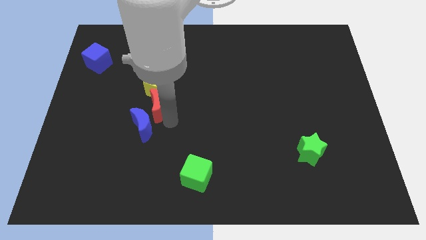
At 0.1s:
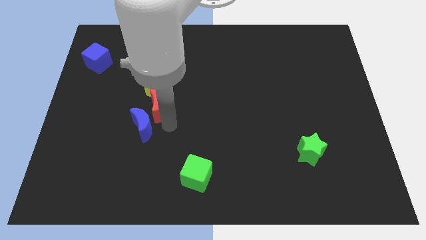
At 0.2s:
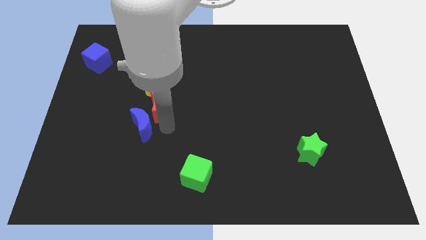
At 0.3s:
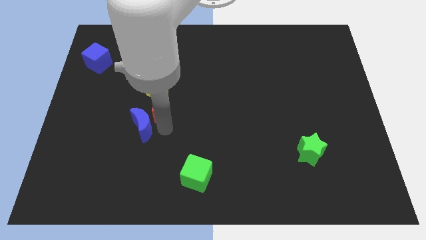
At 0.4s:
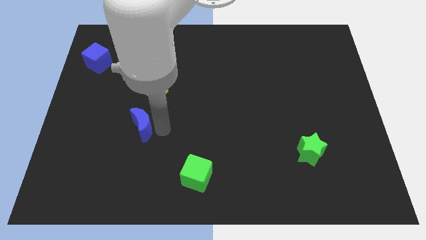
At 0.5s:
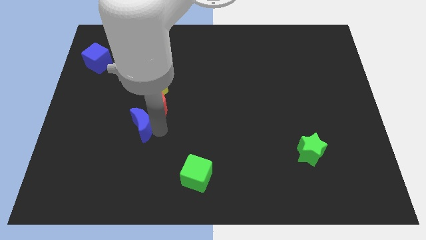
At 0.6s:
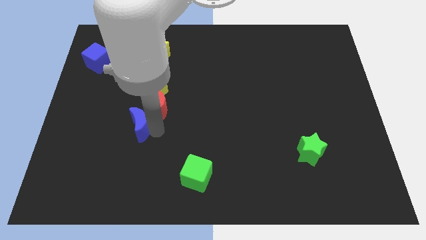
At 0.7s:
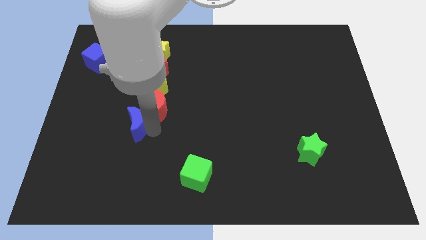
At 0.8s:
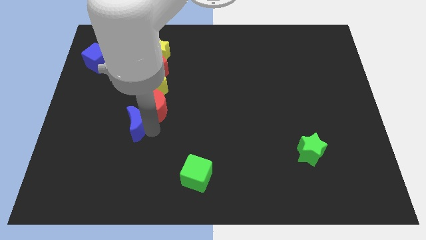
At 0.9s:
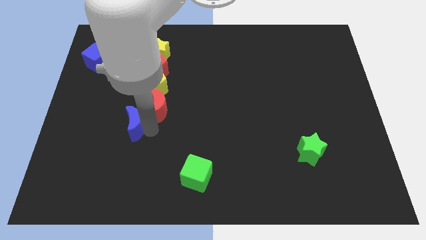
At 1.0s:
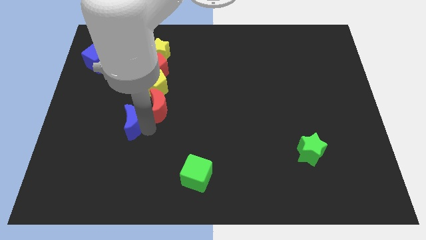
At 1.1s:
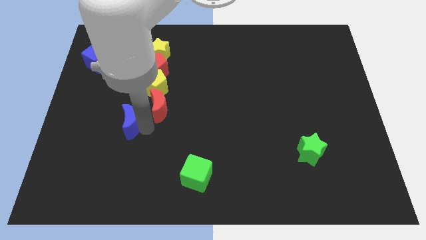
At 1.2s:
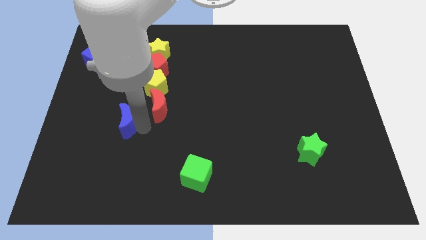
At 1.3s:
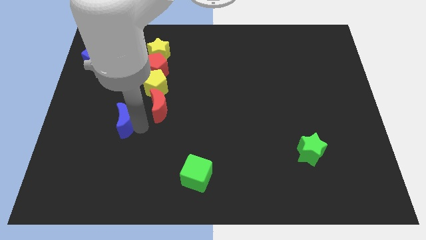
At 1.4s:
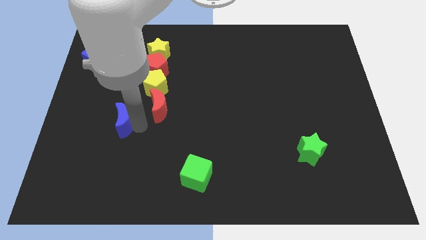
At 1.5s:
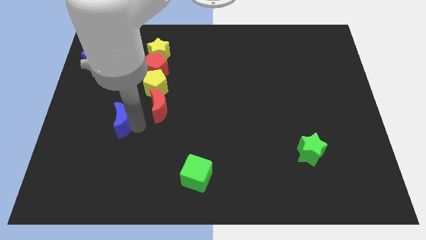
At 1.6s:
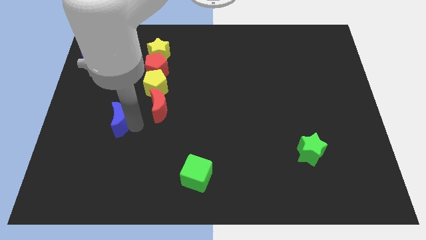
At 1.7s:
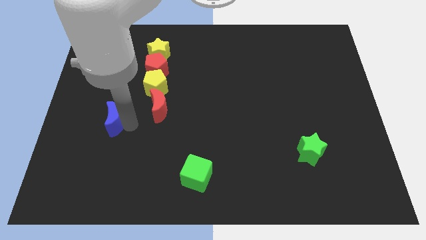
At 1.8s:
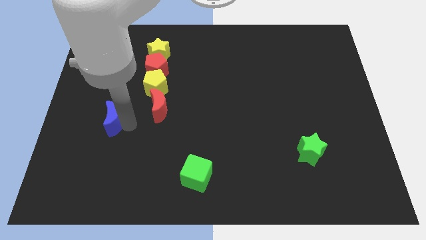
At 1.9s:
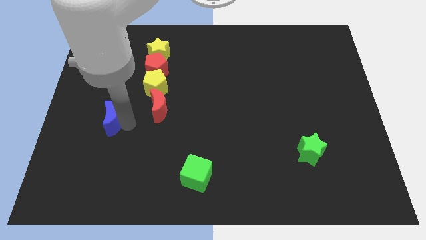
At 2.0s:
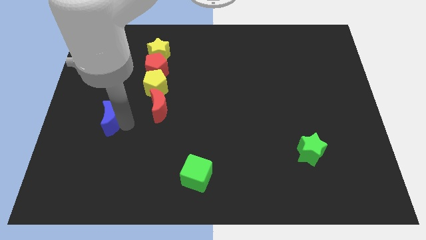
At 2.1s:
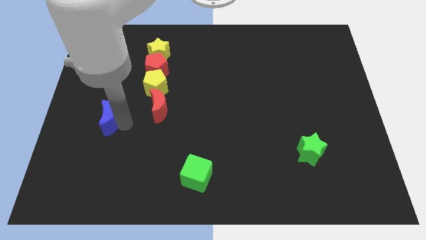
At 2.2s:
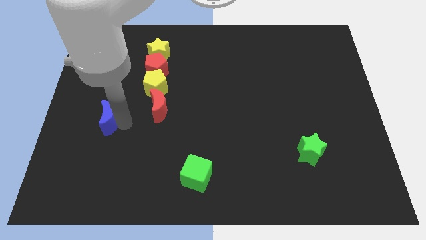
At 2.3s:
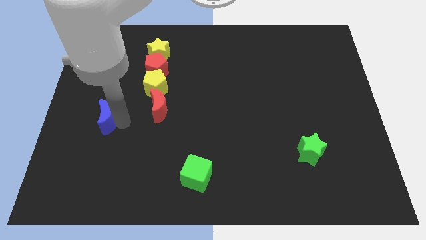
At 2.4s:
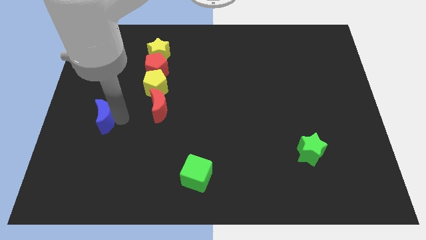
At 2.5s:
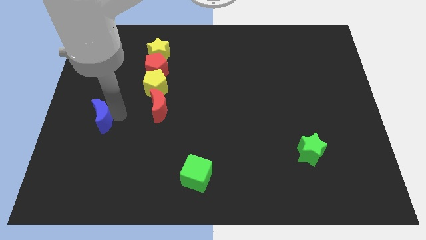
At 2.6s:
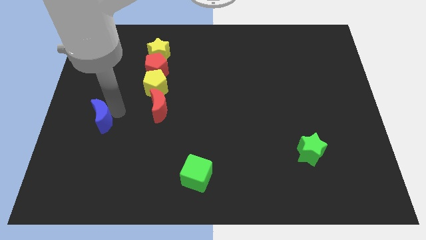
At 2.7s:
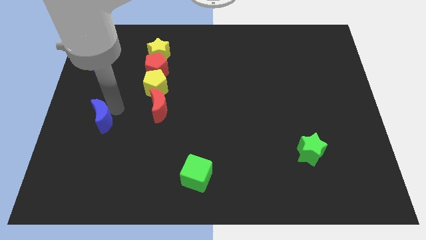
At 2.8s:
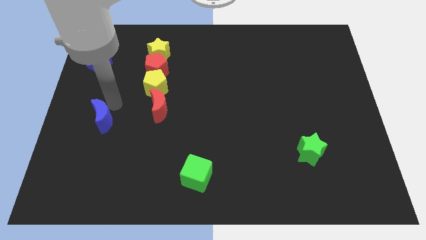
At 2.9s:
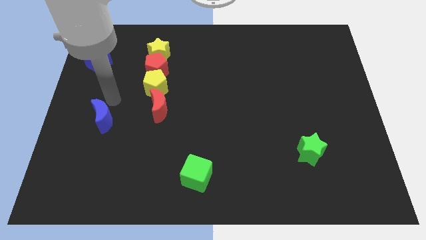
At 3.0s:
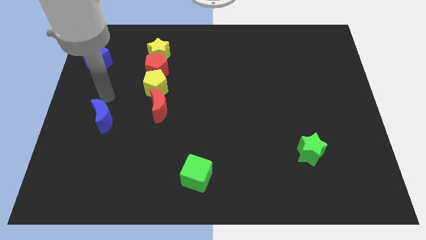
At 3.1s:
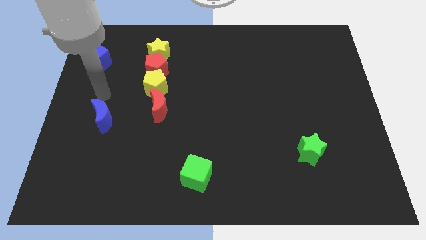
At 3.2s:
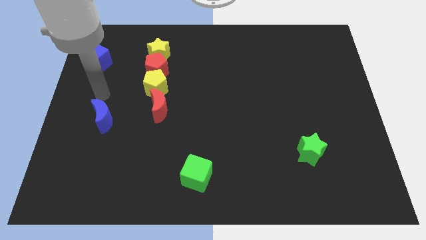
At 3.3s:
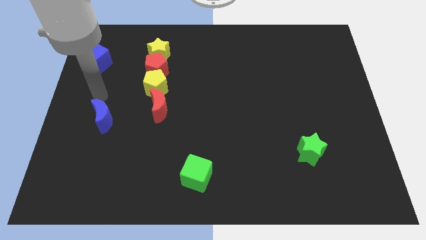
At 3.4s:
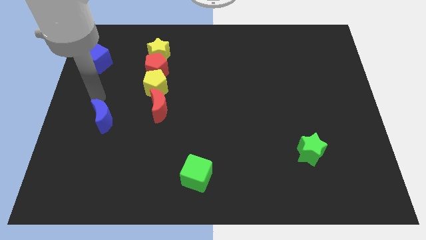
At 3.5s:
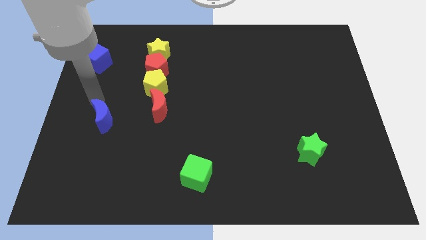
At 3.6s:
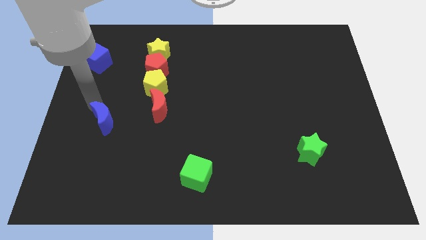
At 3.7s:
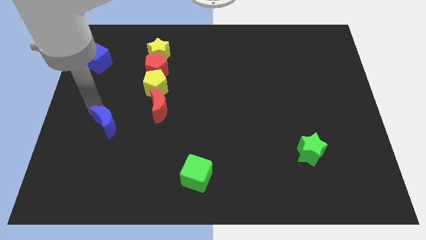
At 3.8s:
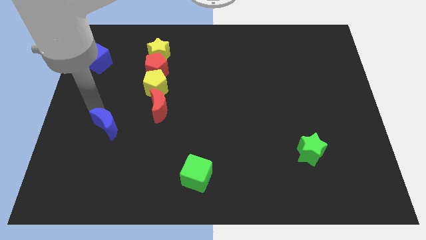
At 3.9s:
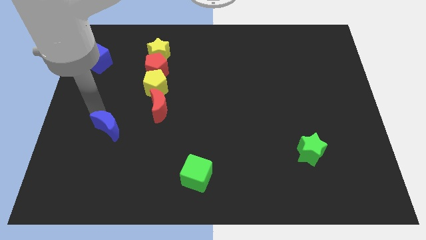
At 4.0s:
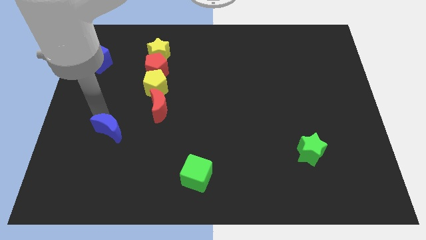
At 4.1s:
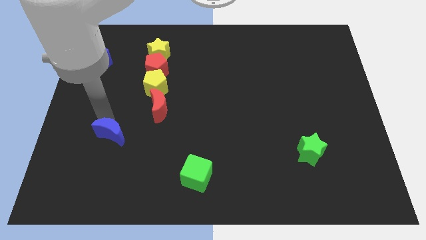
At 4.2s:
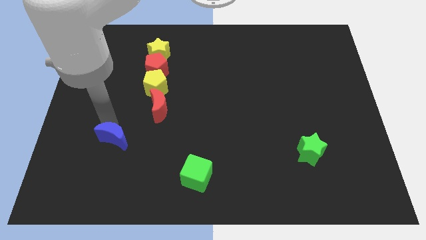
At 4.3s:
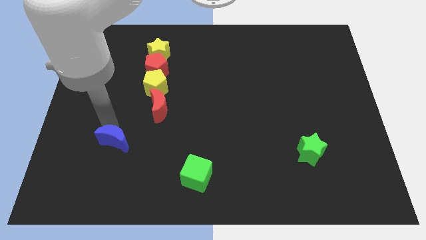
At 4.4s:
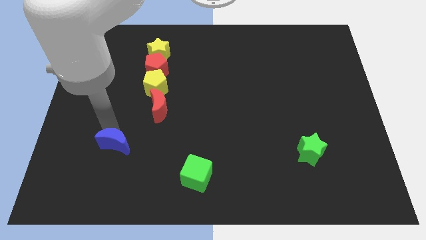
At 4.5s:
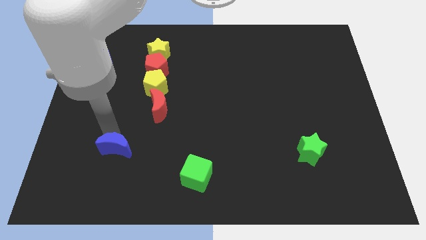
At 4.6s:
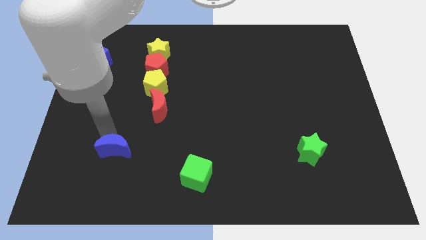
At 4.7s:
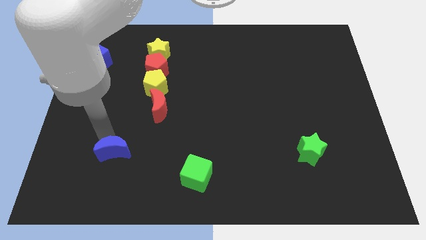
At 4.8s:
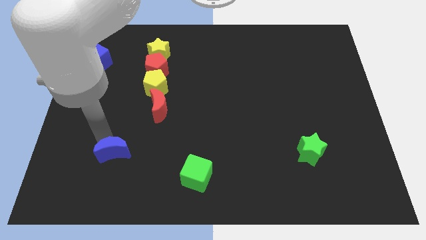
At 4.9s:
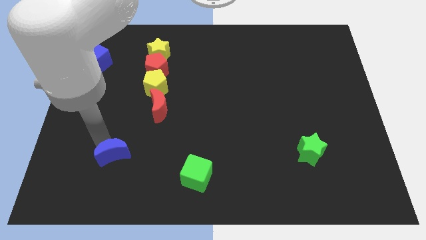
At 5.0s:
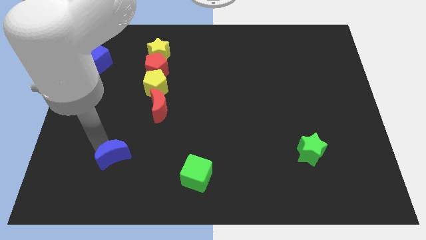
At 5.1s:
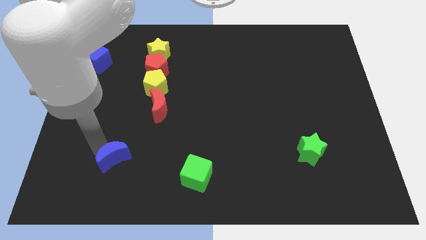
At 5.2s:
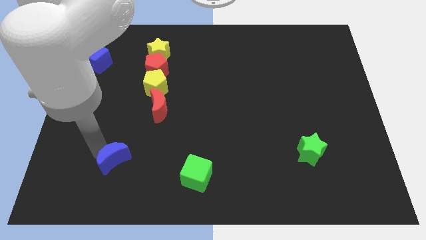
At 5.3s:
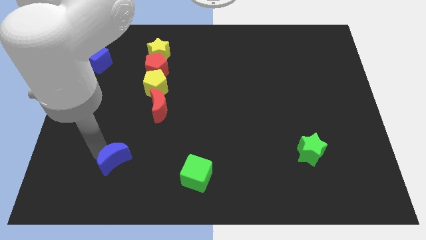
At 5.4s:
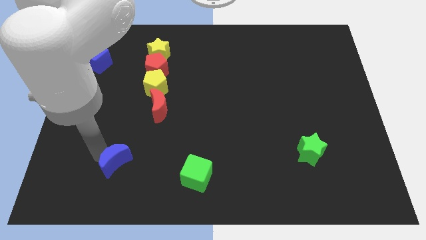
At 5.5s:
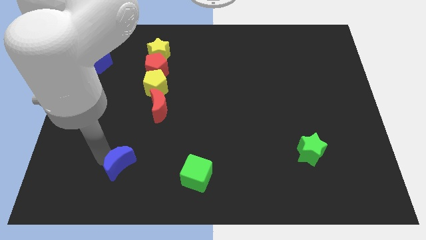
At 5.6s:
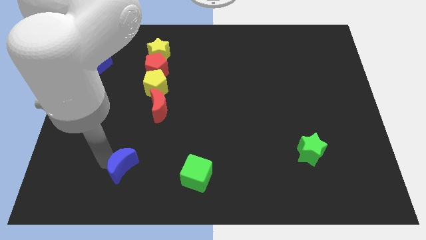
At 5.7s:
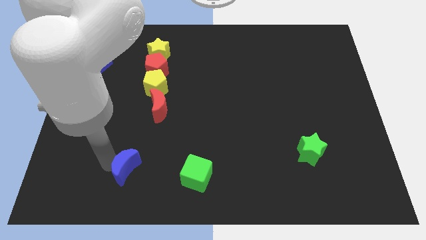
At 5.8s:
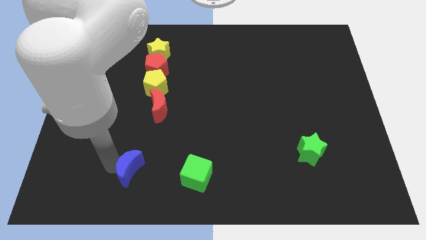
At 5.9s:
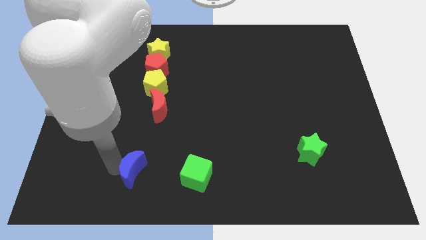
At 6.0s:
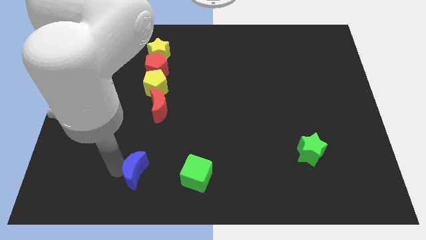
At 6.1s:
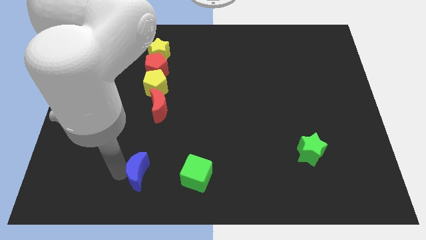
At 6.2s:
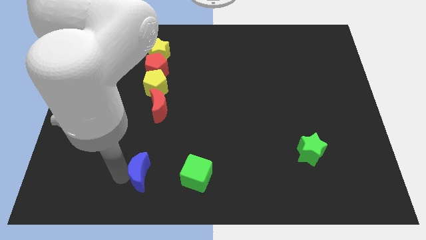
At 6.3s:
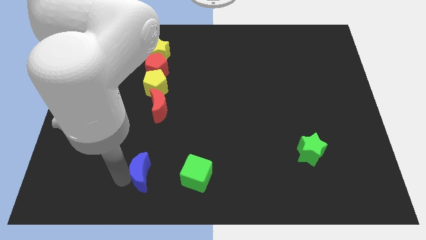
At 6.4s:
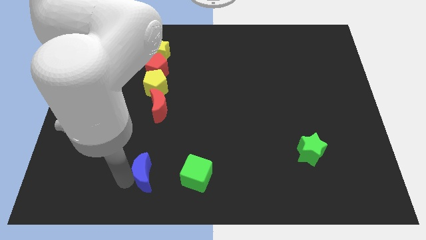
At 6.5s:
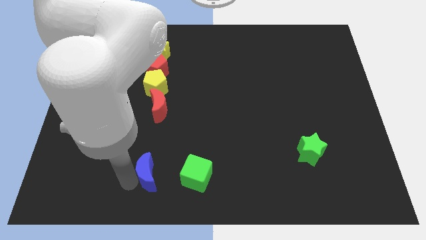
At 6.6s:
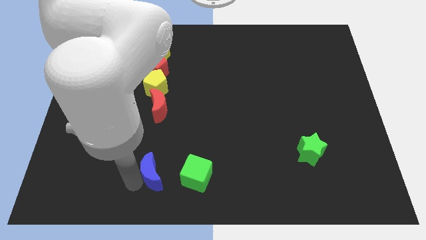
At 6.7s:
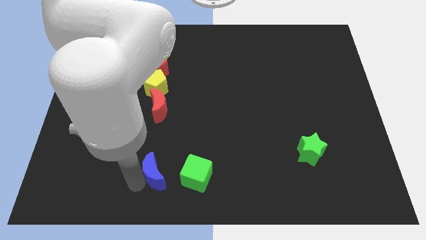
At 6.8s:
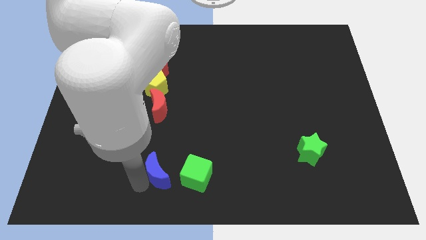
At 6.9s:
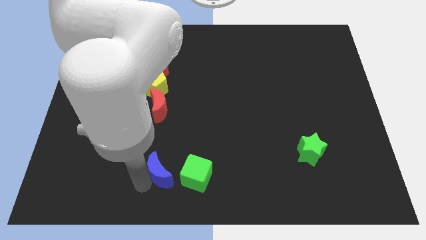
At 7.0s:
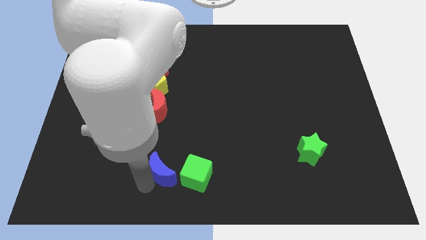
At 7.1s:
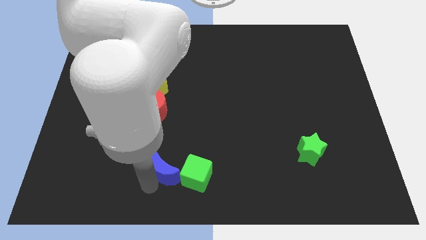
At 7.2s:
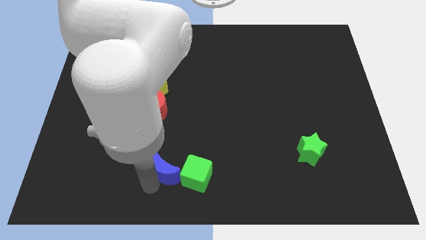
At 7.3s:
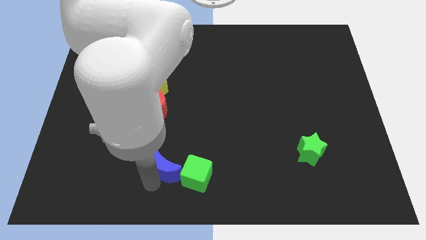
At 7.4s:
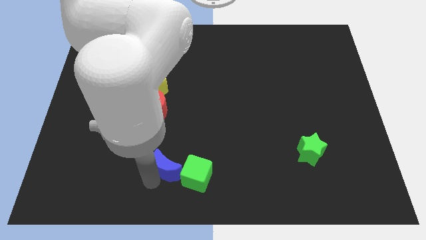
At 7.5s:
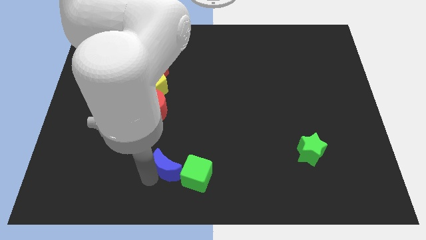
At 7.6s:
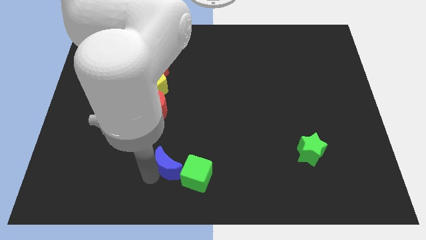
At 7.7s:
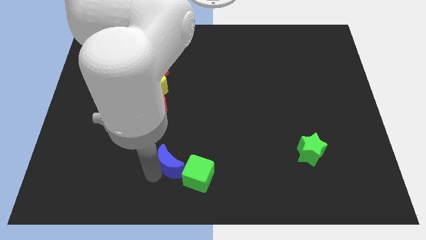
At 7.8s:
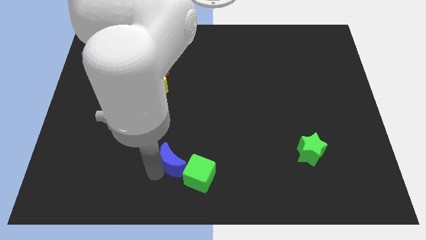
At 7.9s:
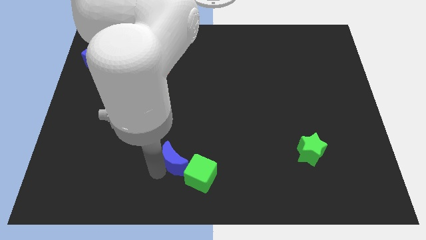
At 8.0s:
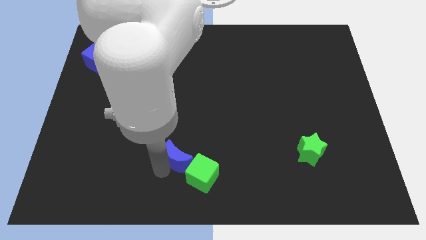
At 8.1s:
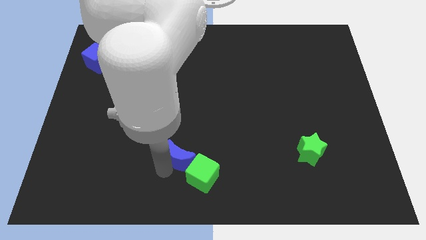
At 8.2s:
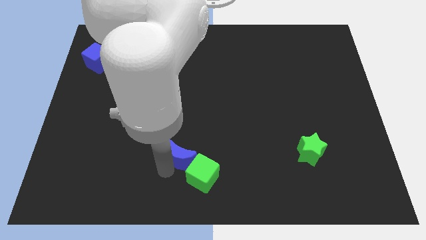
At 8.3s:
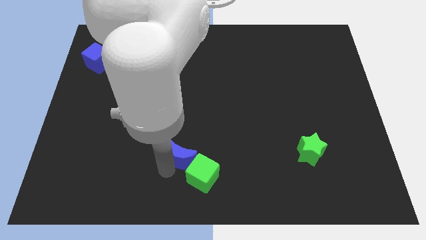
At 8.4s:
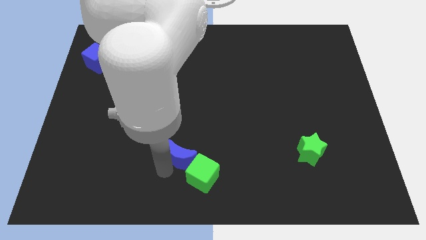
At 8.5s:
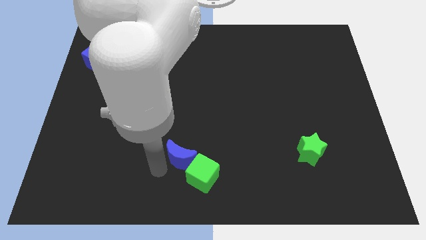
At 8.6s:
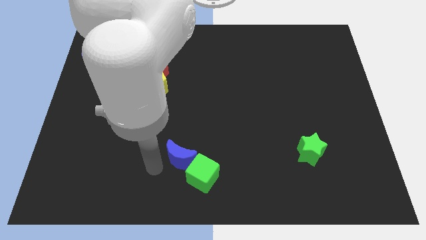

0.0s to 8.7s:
push the blue crescent into the green cube

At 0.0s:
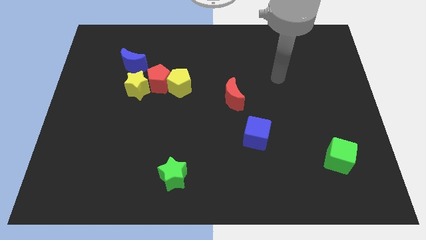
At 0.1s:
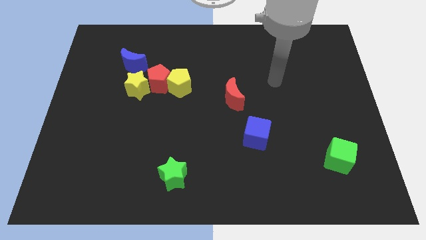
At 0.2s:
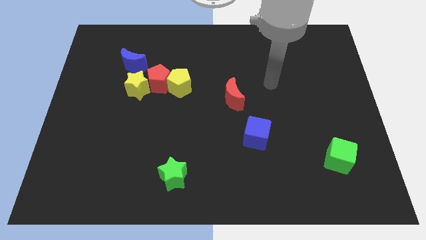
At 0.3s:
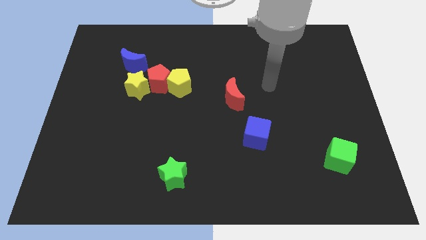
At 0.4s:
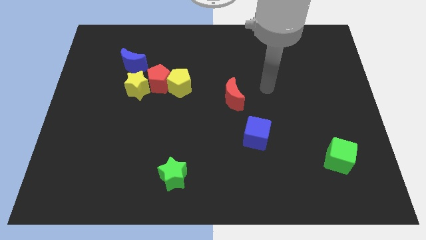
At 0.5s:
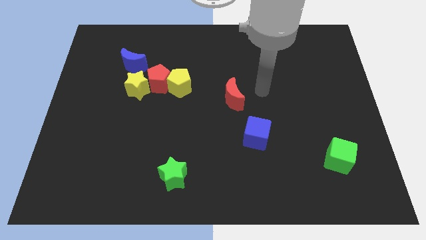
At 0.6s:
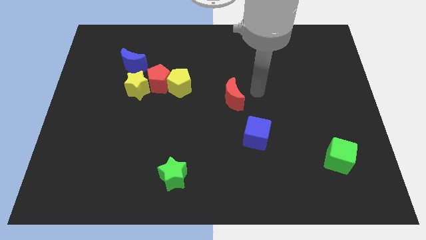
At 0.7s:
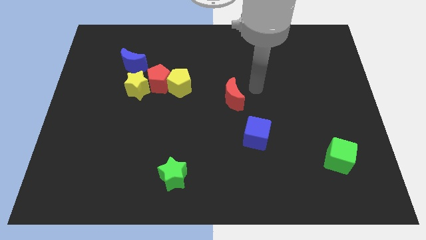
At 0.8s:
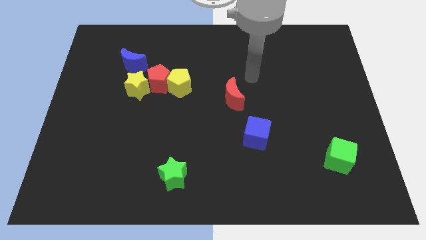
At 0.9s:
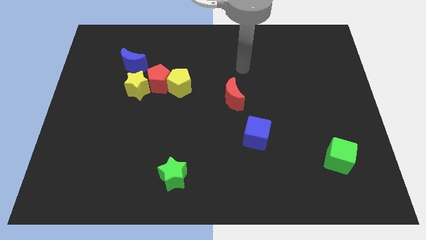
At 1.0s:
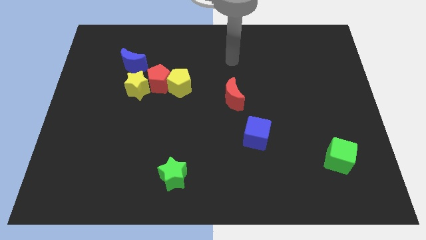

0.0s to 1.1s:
slide your arm above the red moon
